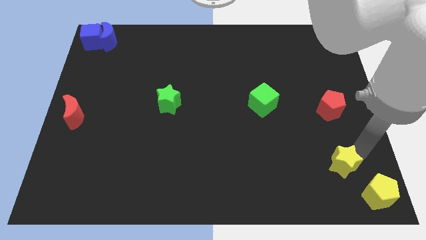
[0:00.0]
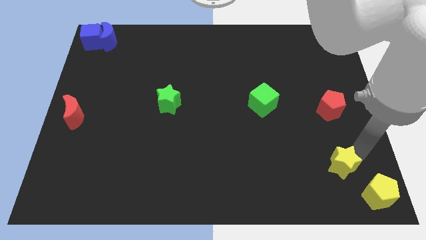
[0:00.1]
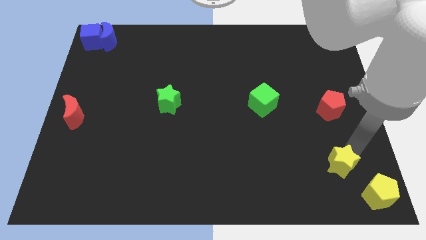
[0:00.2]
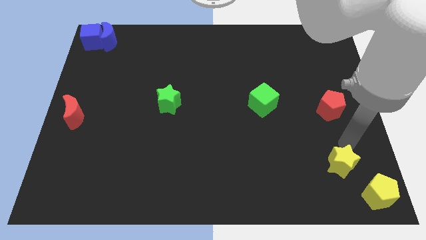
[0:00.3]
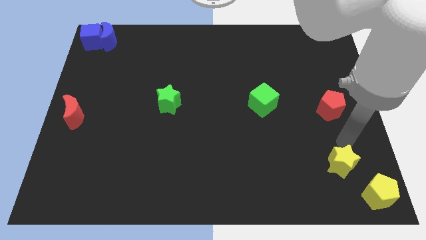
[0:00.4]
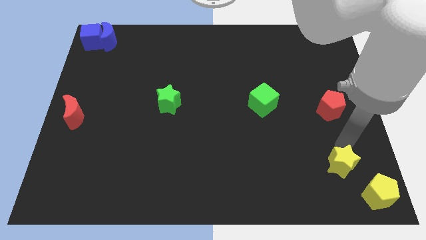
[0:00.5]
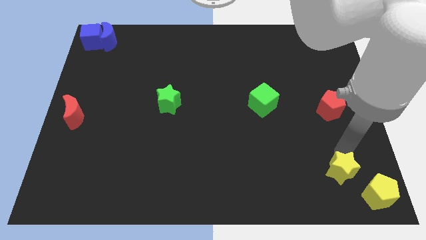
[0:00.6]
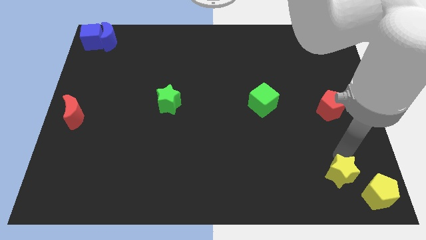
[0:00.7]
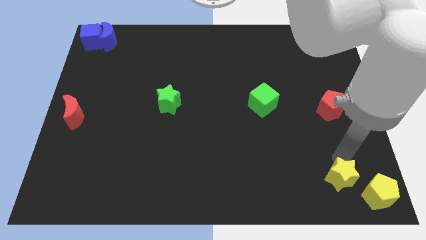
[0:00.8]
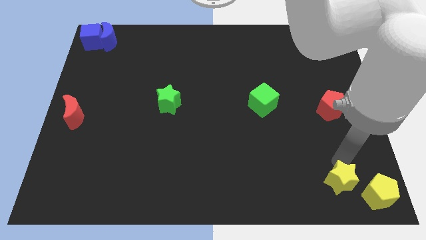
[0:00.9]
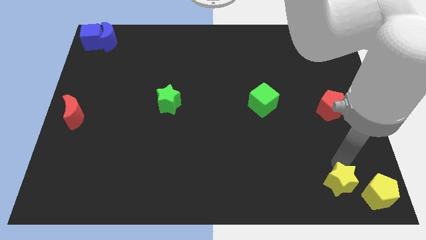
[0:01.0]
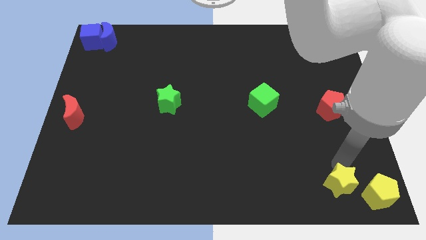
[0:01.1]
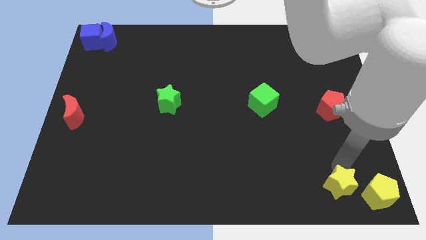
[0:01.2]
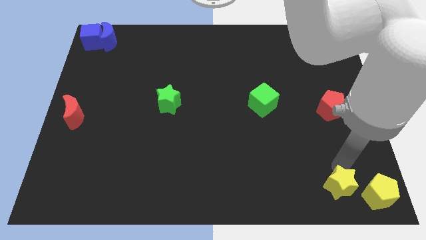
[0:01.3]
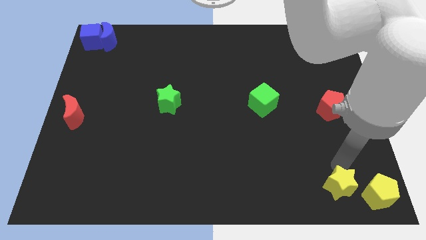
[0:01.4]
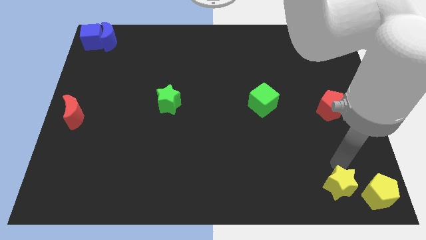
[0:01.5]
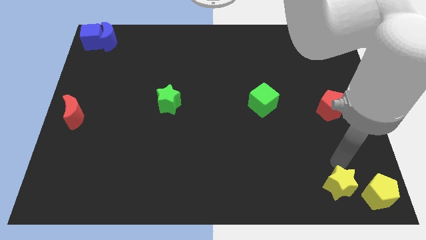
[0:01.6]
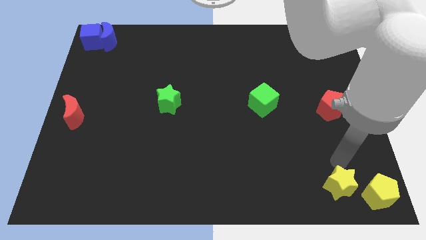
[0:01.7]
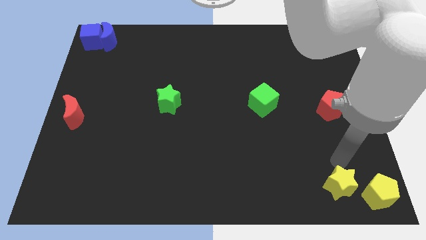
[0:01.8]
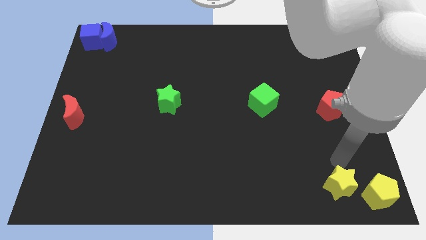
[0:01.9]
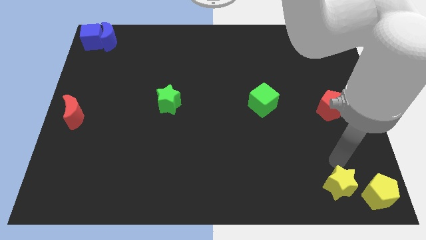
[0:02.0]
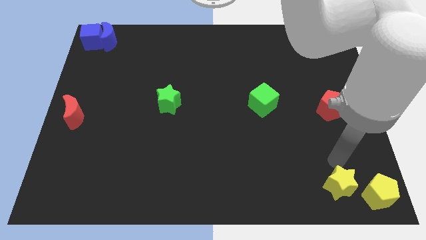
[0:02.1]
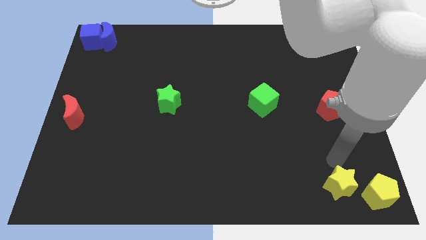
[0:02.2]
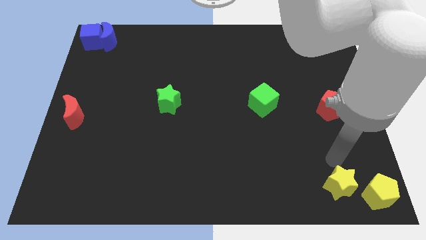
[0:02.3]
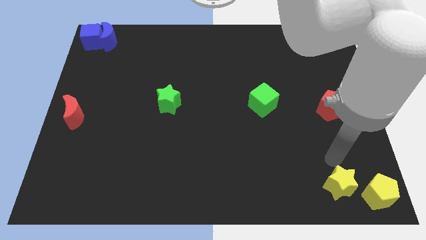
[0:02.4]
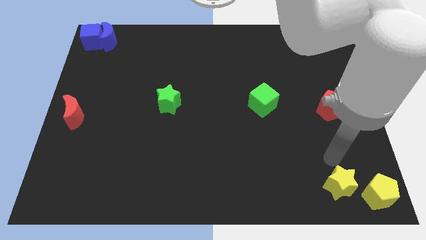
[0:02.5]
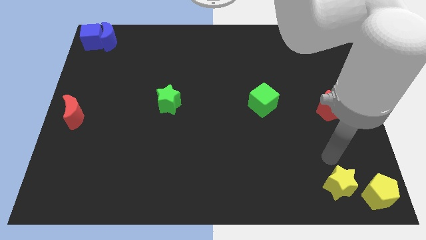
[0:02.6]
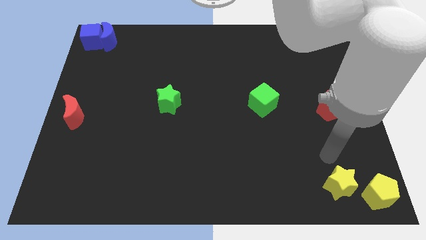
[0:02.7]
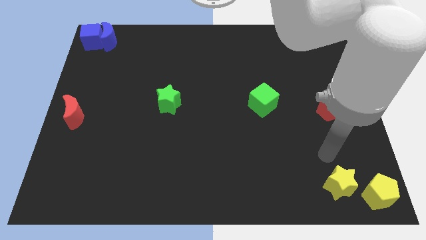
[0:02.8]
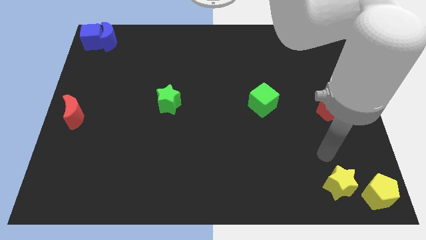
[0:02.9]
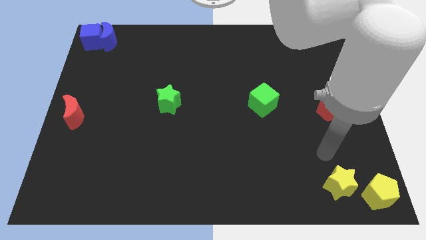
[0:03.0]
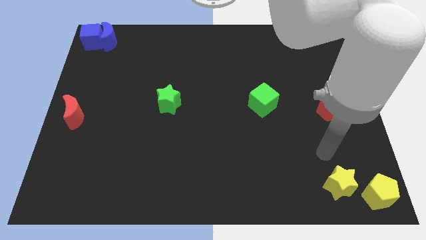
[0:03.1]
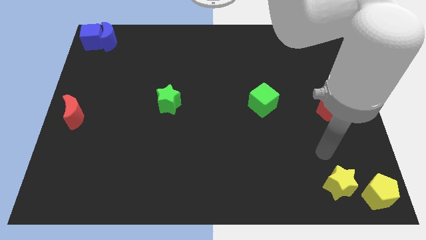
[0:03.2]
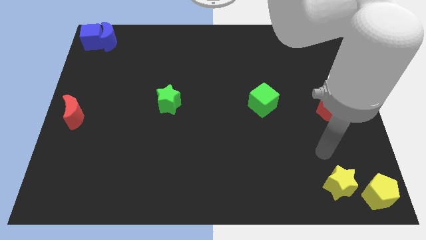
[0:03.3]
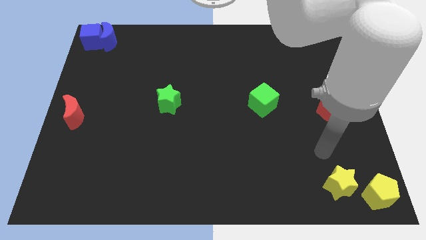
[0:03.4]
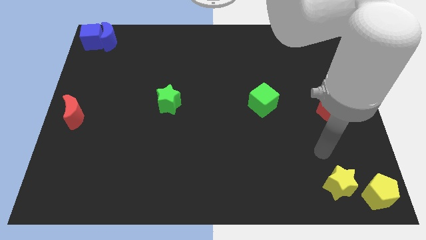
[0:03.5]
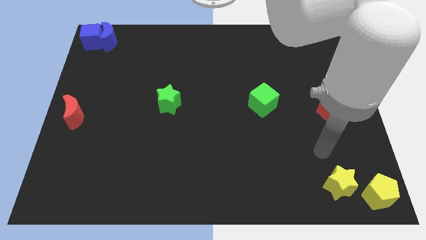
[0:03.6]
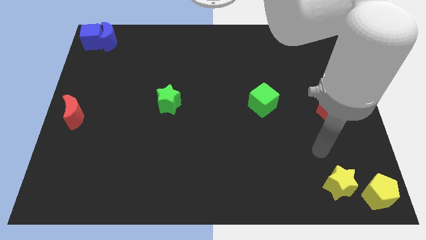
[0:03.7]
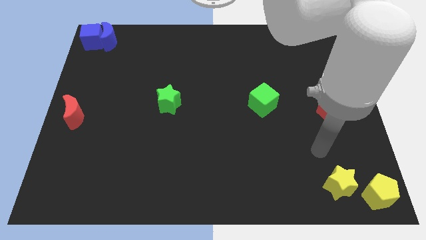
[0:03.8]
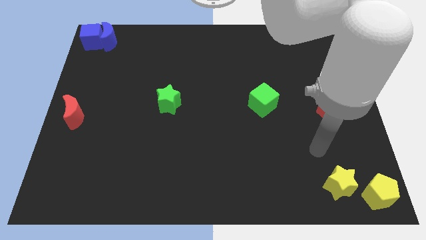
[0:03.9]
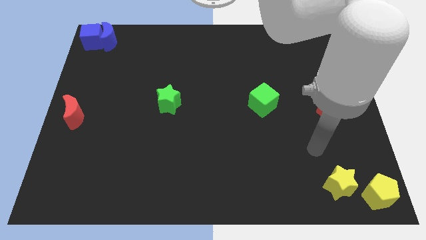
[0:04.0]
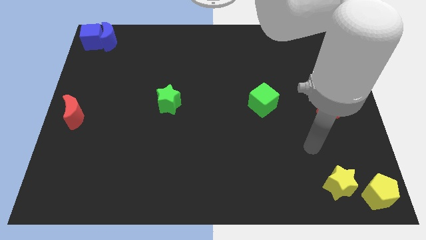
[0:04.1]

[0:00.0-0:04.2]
move the yellow star left beside the yellow pentagon

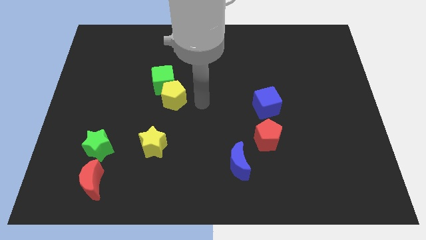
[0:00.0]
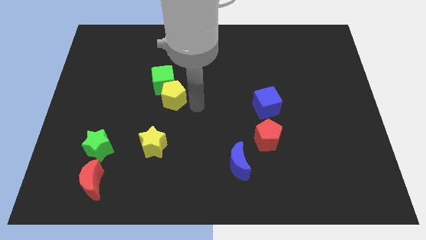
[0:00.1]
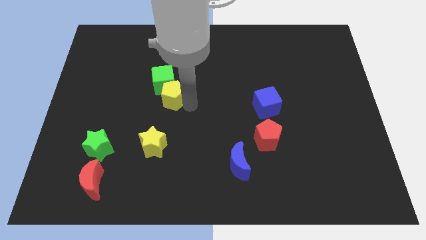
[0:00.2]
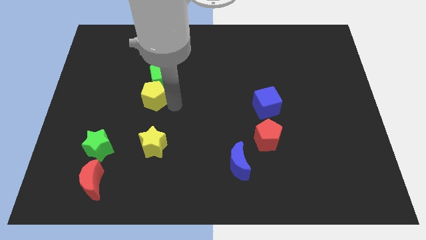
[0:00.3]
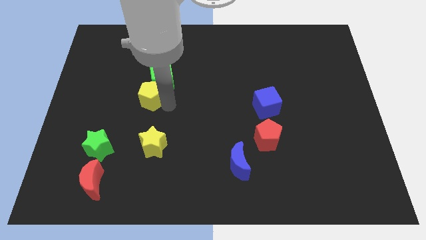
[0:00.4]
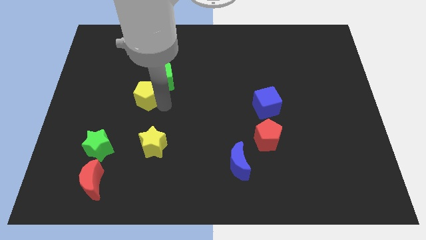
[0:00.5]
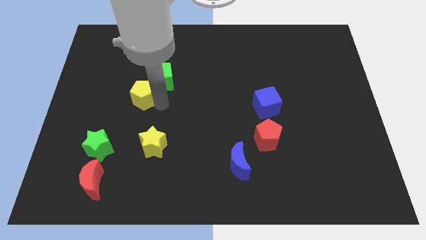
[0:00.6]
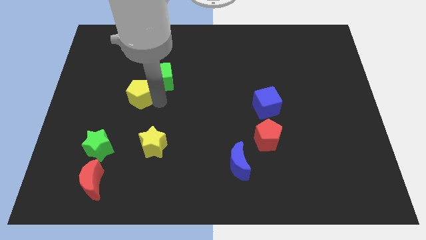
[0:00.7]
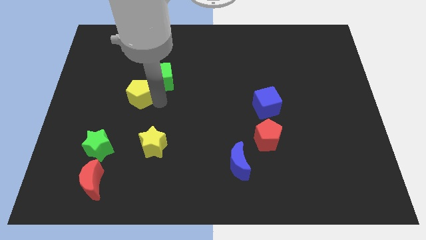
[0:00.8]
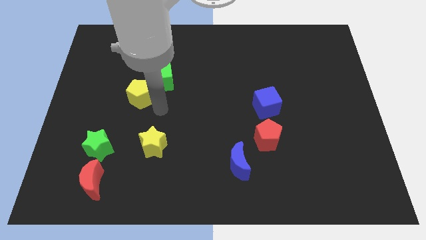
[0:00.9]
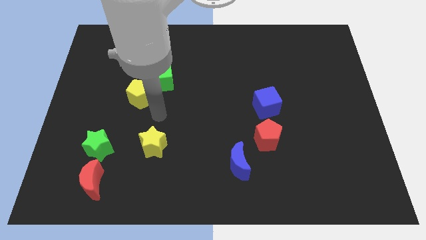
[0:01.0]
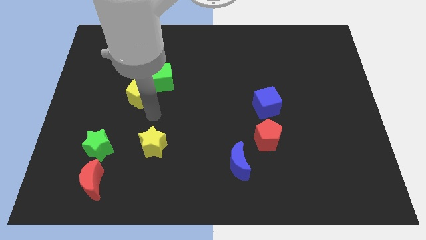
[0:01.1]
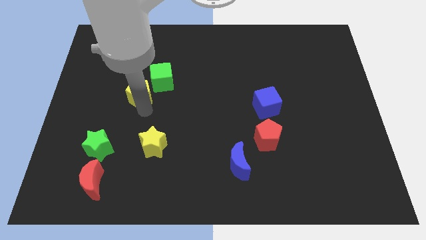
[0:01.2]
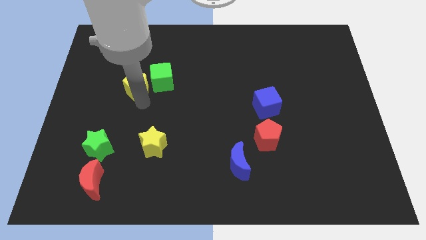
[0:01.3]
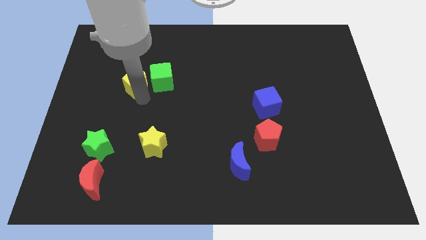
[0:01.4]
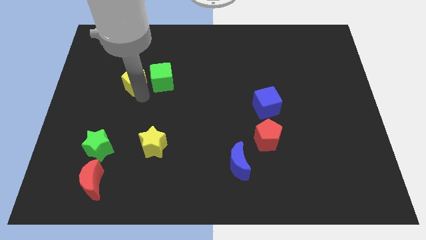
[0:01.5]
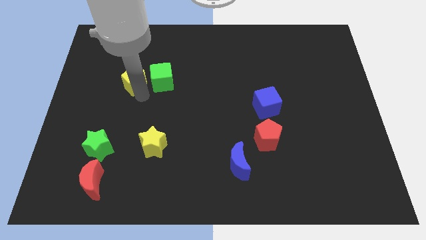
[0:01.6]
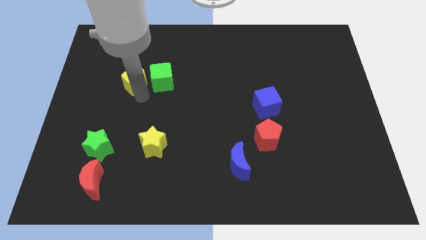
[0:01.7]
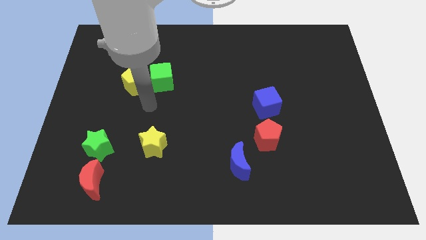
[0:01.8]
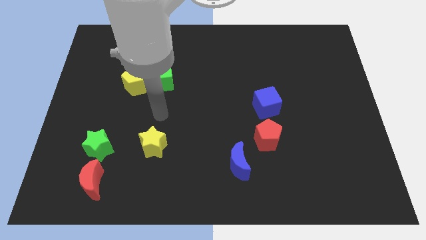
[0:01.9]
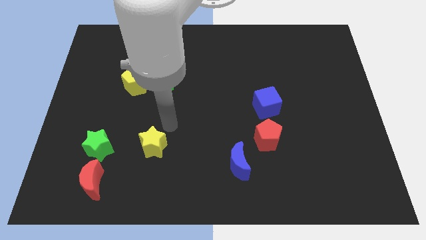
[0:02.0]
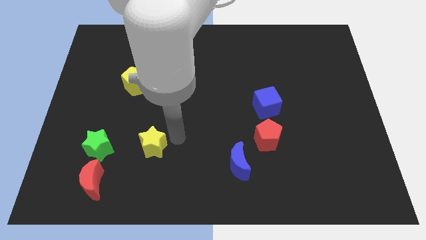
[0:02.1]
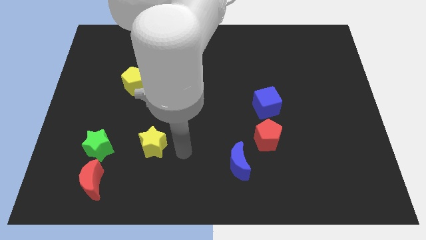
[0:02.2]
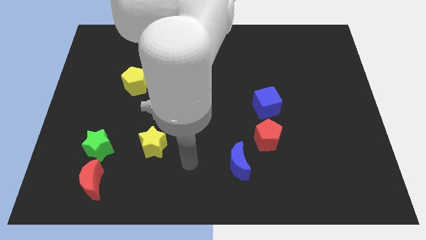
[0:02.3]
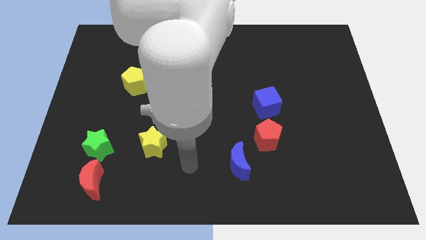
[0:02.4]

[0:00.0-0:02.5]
place the yellow pentagon to the left of the green cube

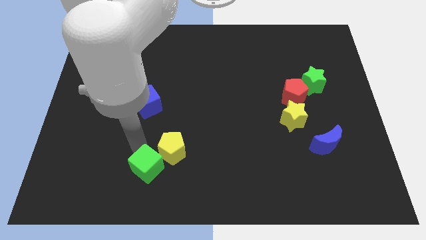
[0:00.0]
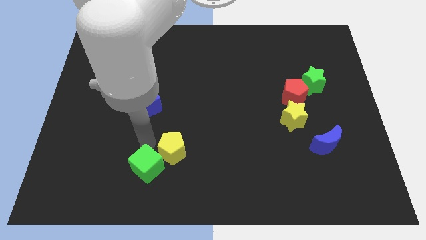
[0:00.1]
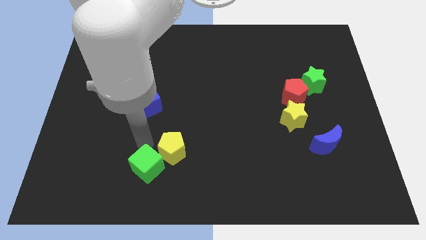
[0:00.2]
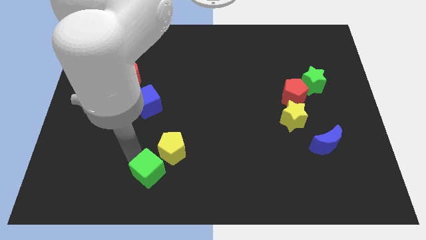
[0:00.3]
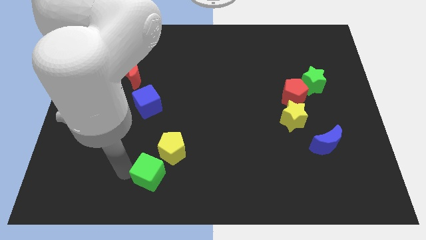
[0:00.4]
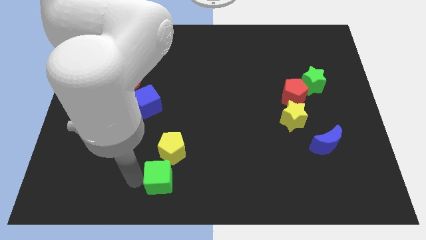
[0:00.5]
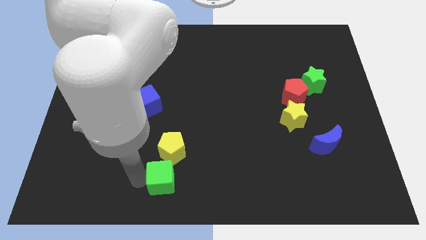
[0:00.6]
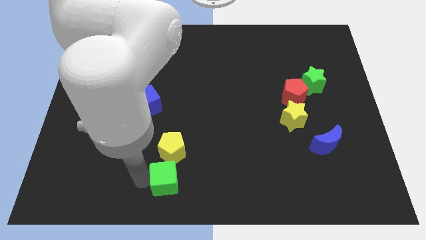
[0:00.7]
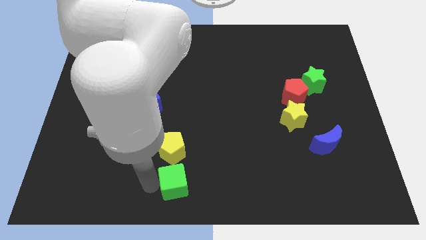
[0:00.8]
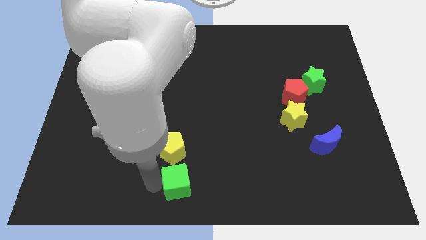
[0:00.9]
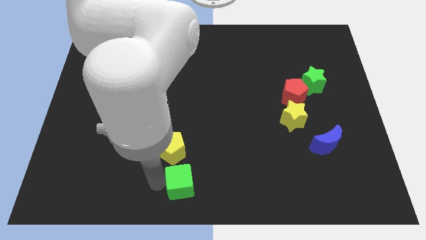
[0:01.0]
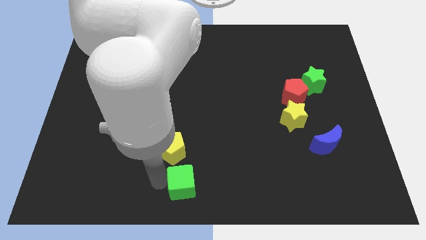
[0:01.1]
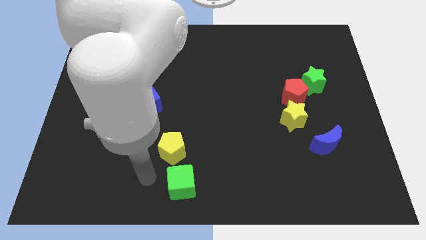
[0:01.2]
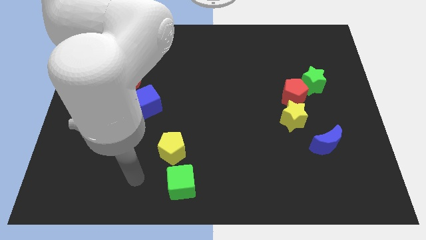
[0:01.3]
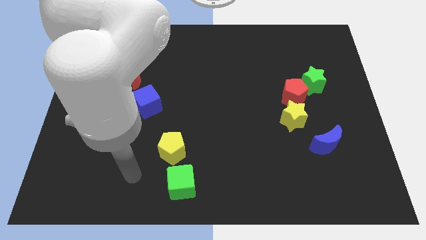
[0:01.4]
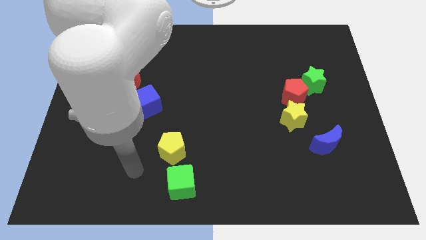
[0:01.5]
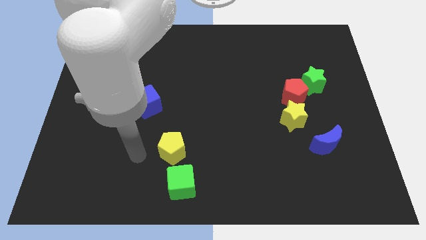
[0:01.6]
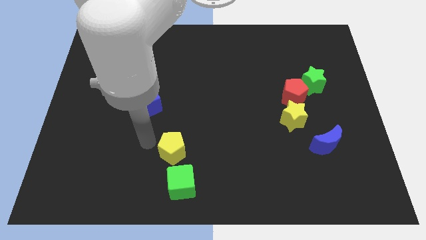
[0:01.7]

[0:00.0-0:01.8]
place the green cube below the yellow pentagon

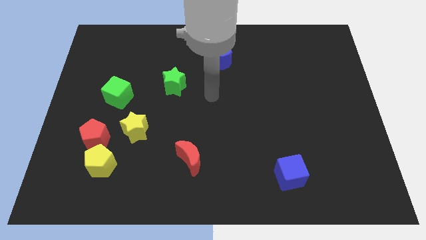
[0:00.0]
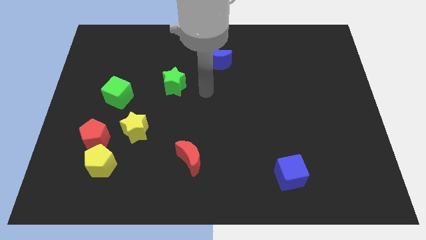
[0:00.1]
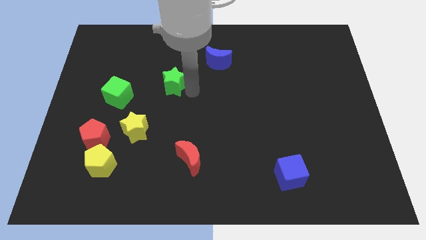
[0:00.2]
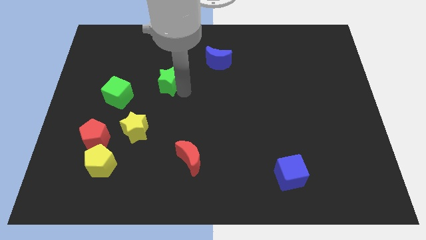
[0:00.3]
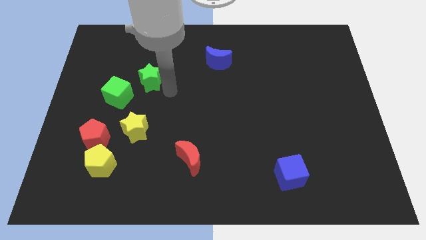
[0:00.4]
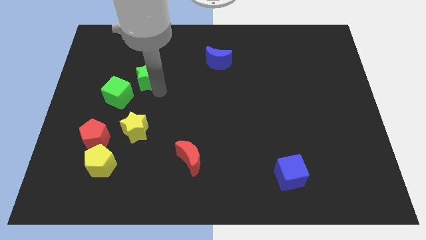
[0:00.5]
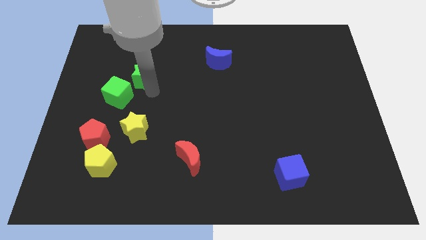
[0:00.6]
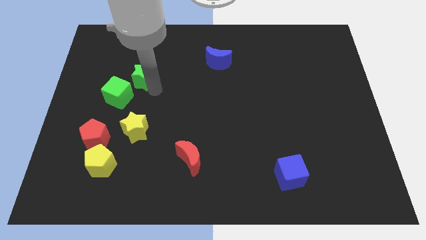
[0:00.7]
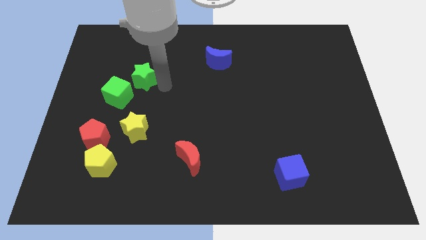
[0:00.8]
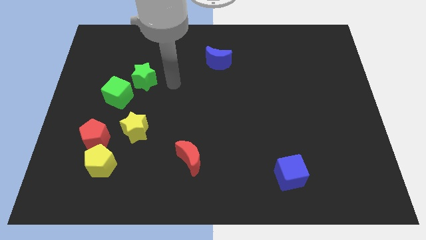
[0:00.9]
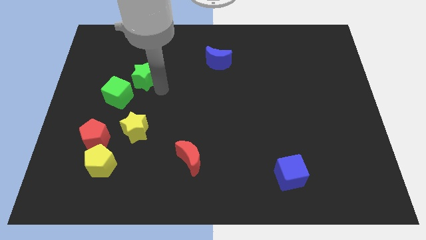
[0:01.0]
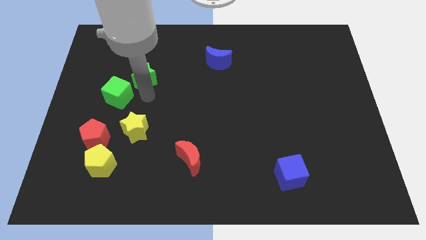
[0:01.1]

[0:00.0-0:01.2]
push the green star to the vertical top side of the yellow star
